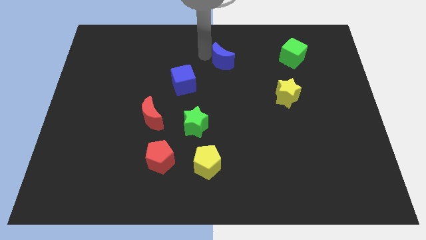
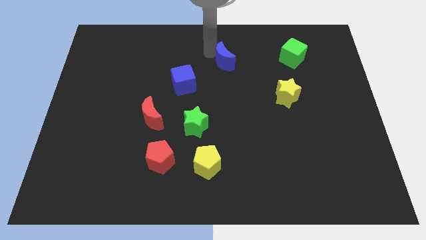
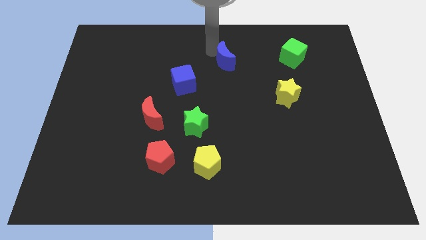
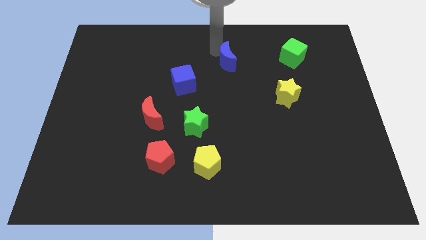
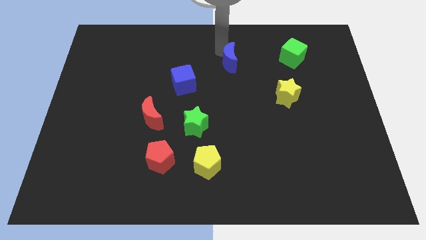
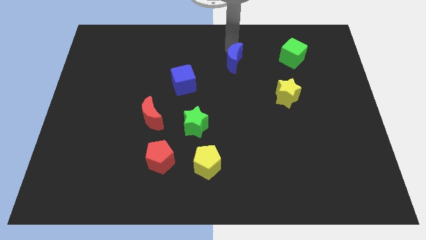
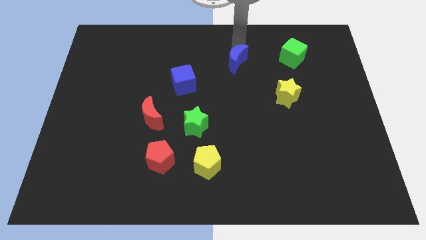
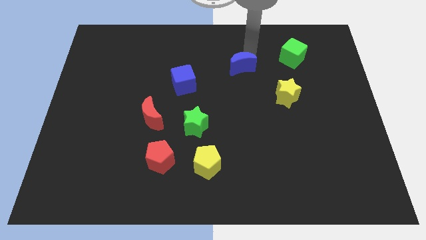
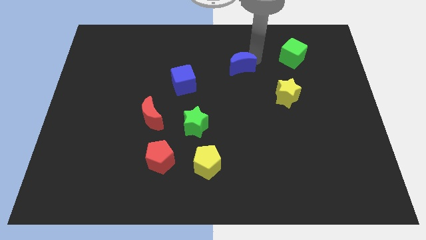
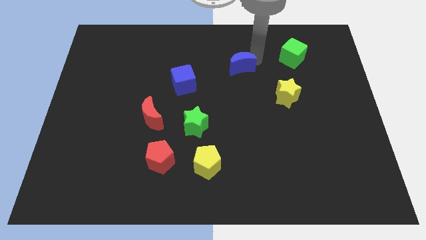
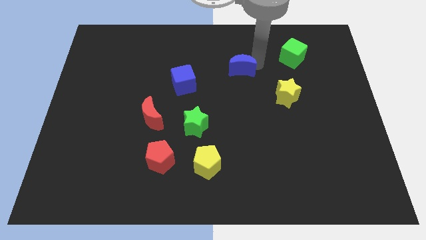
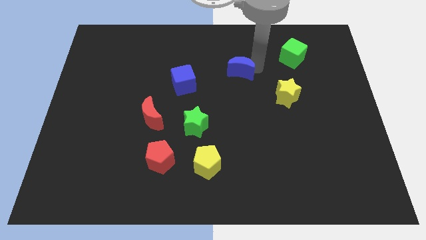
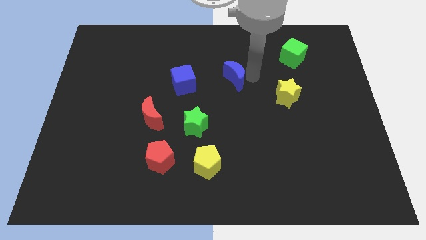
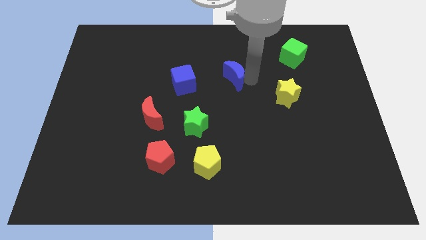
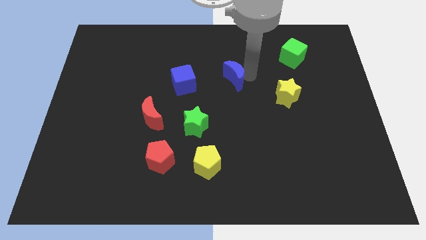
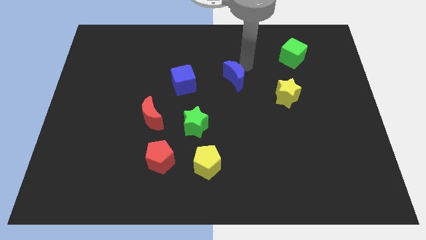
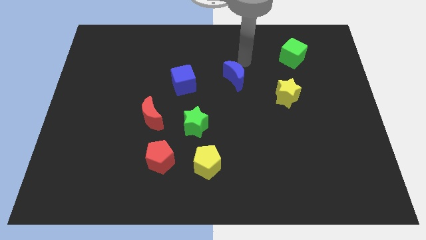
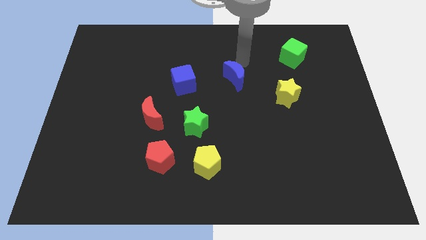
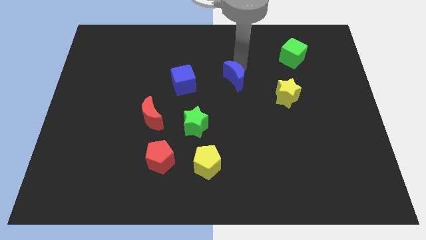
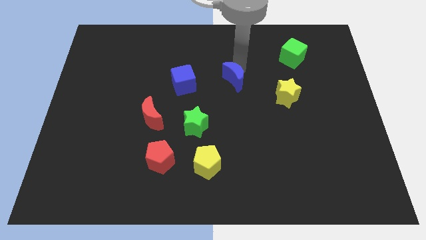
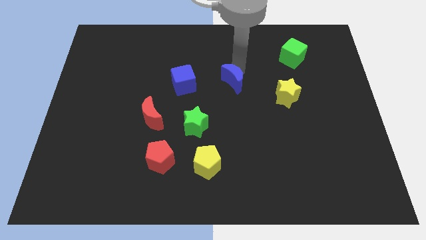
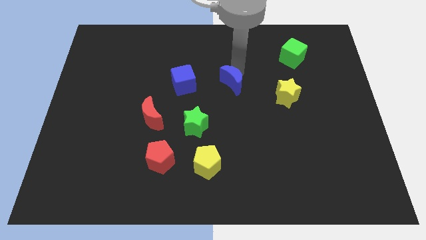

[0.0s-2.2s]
place blue moon adjacent to blue cube

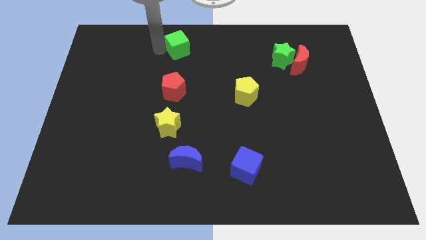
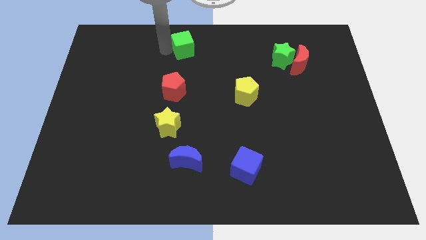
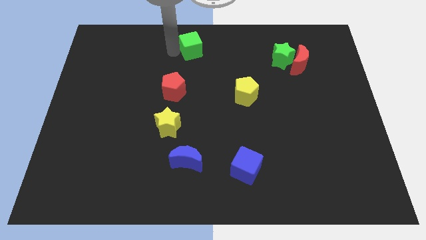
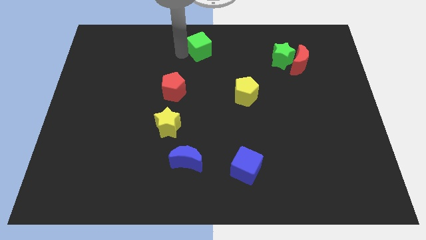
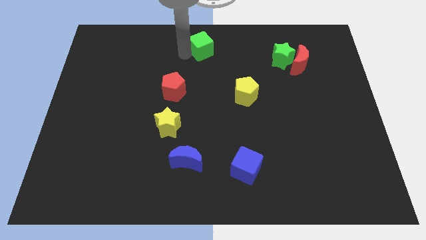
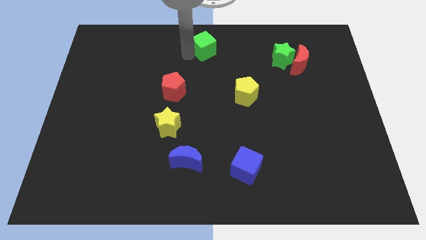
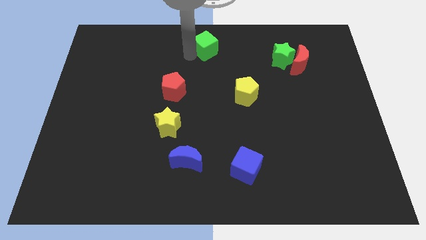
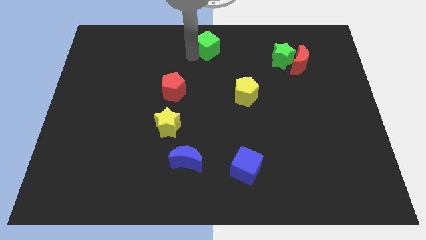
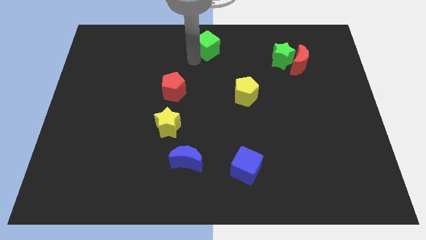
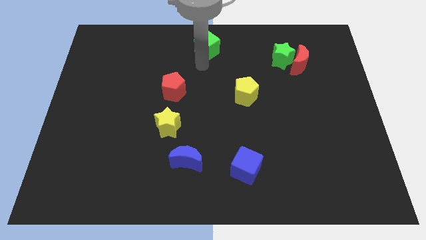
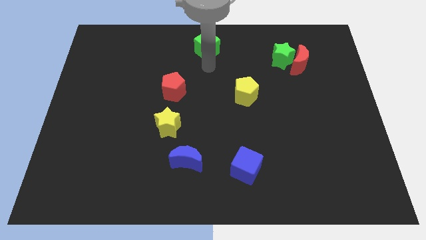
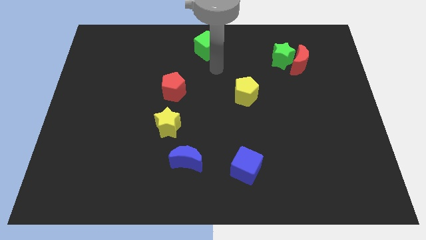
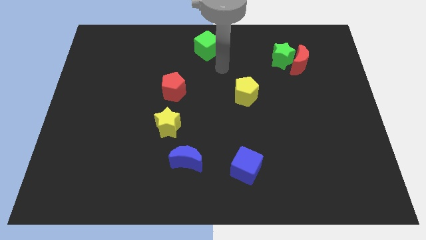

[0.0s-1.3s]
push green cube at the top center of the board

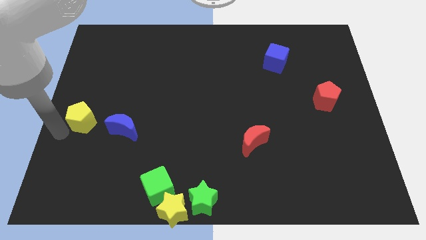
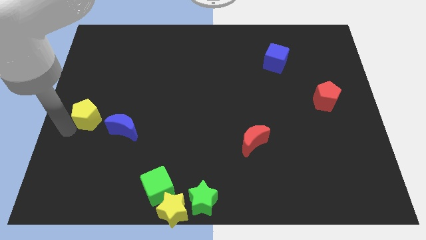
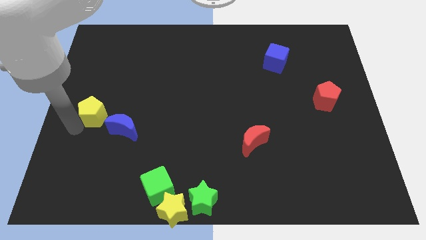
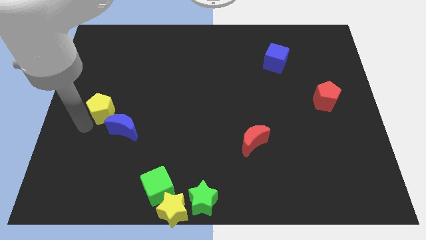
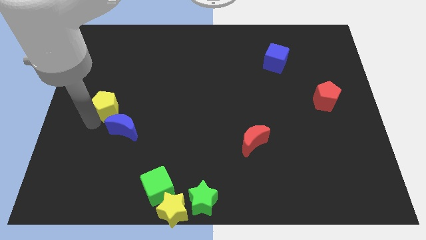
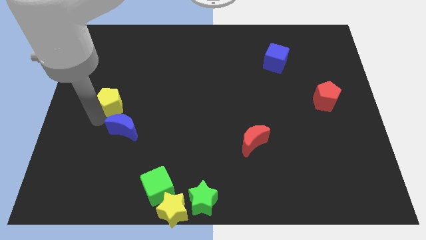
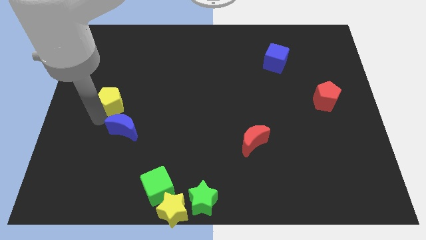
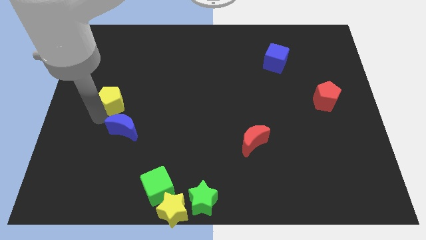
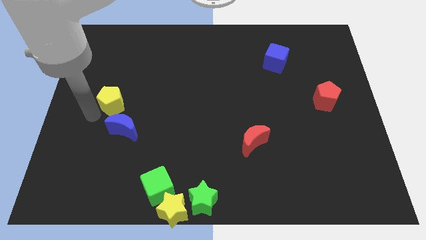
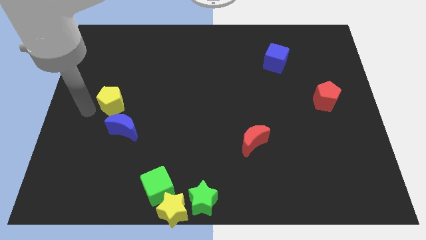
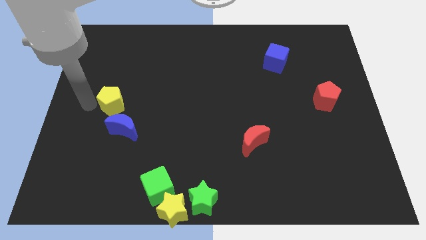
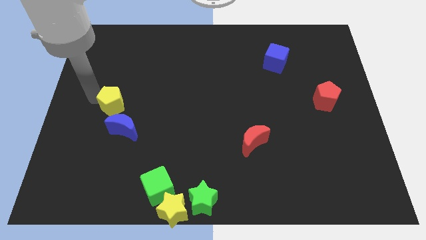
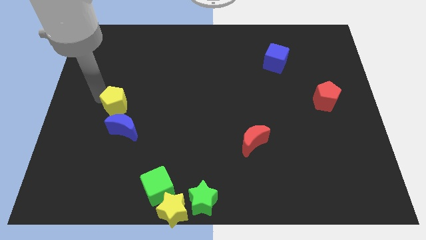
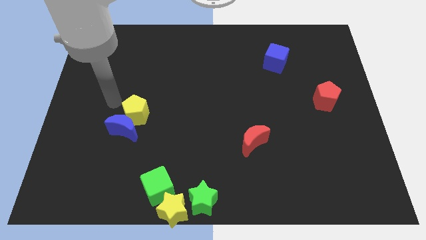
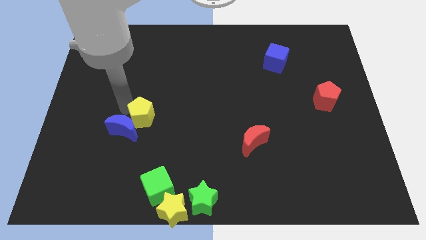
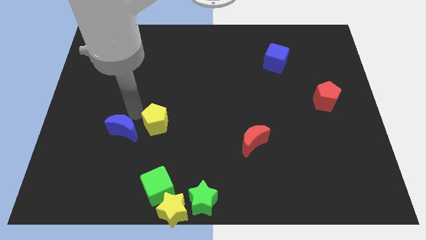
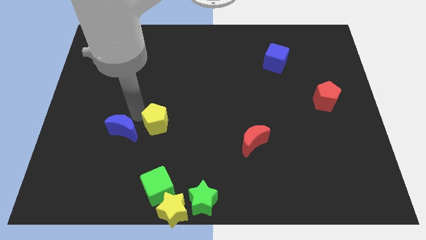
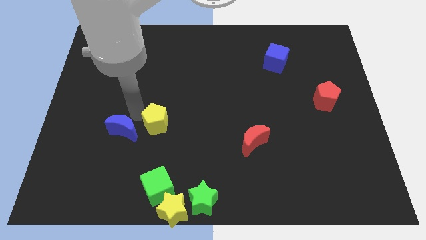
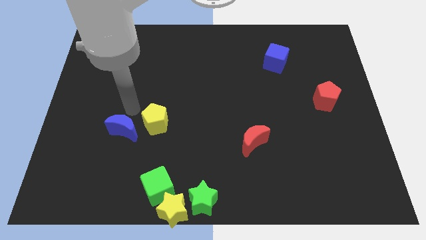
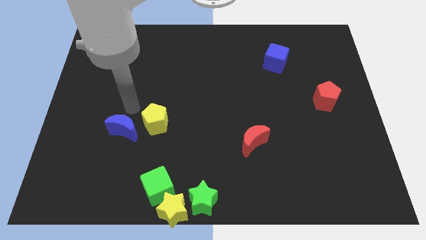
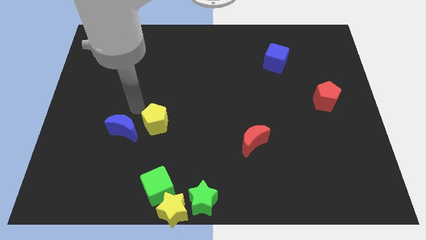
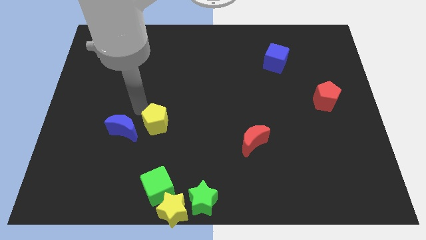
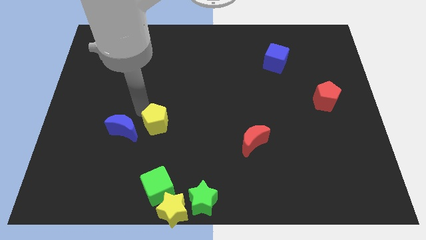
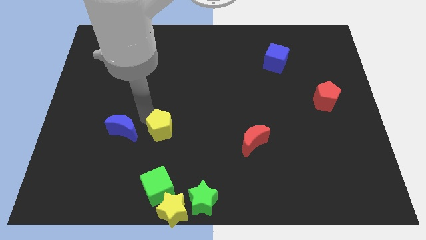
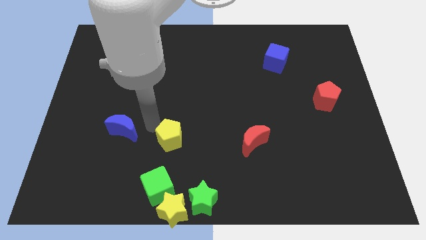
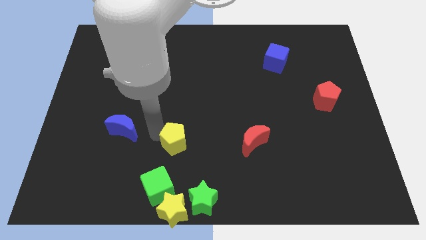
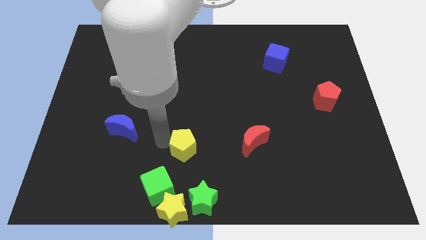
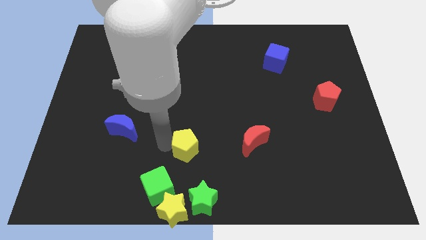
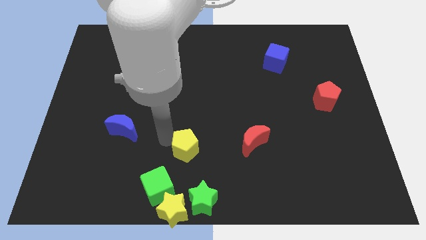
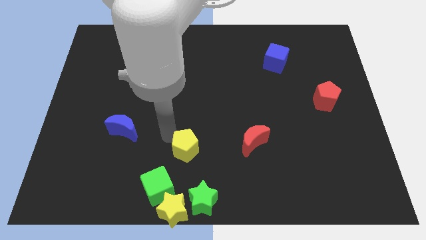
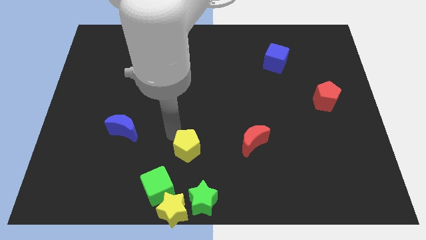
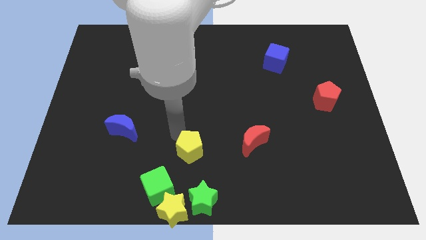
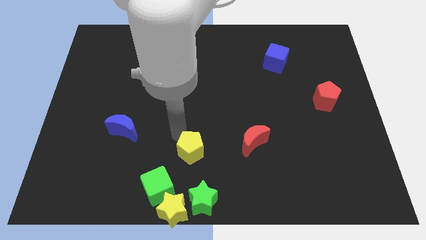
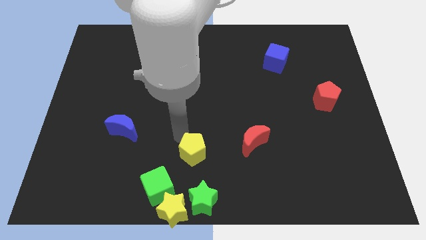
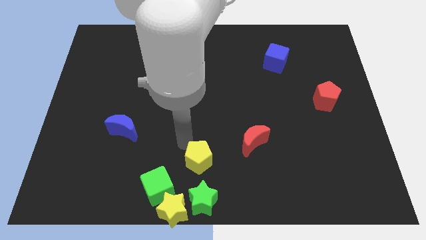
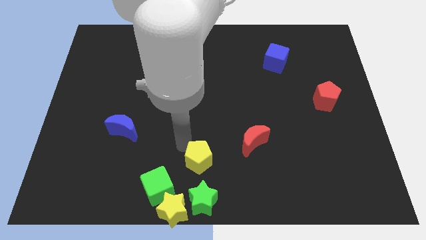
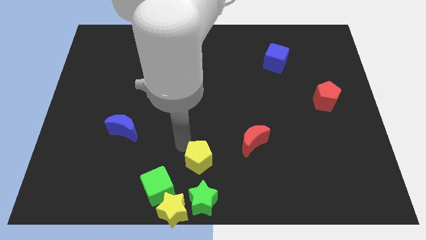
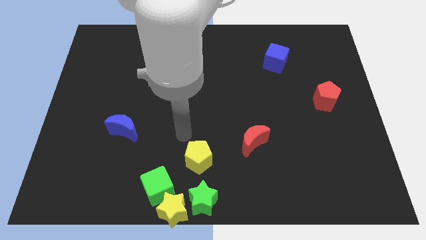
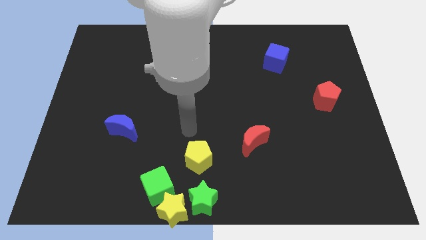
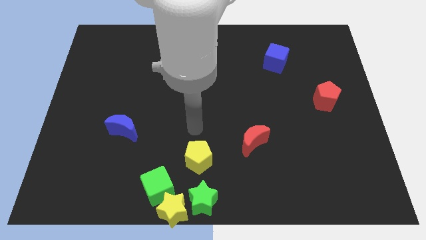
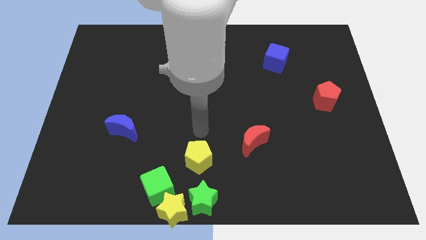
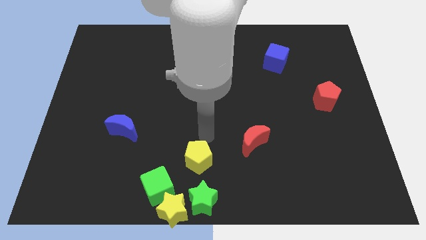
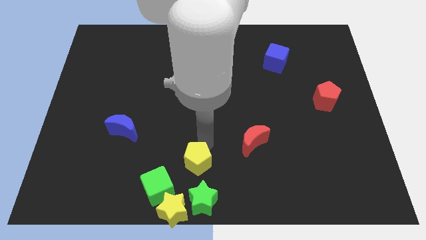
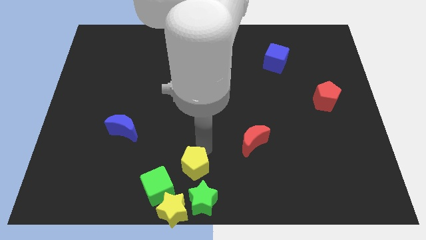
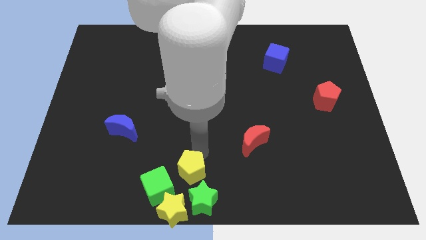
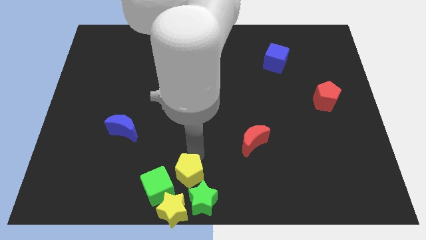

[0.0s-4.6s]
put the yellow pentagon diagonally top left to green star

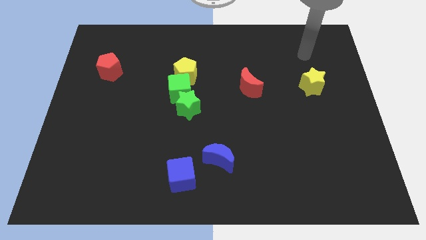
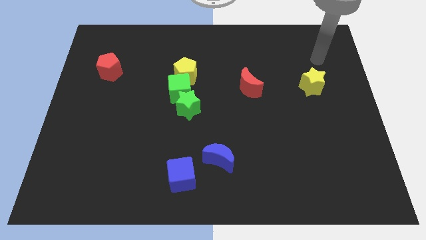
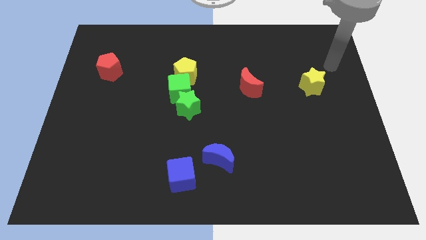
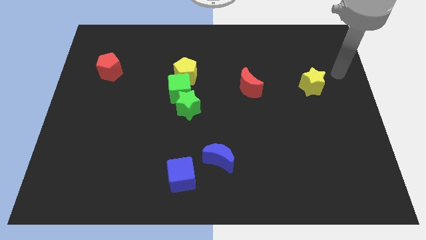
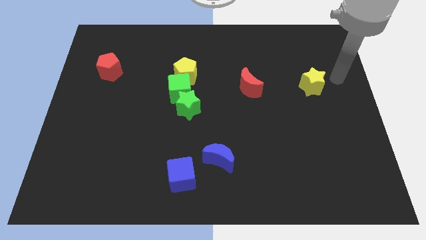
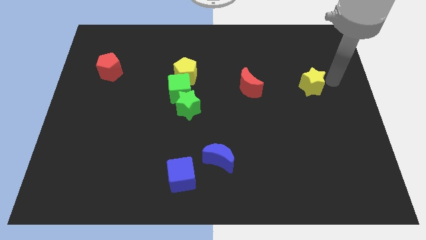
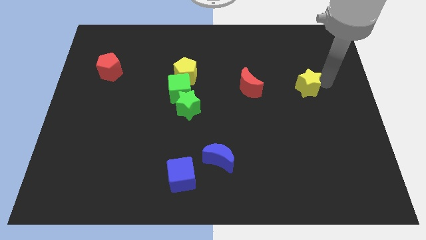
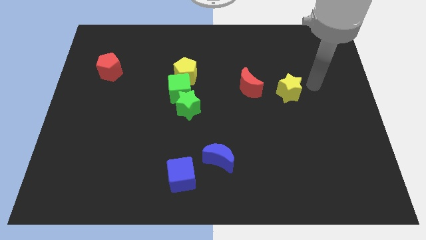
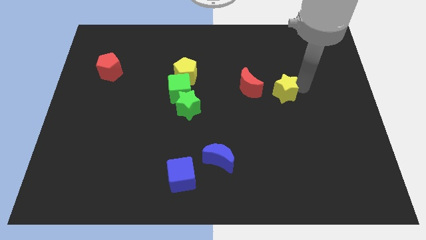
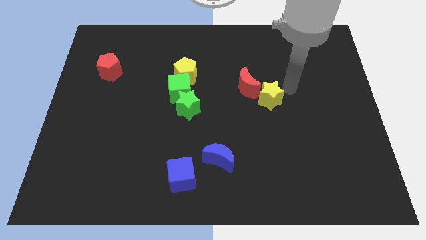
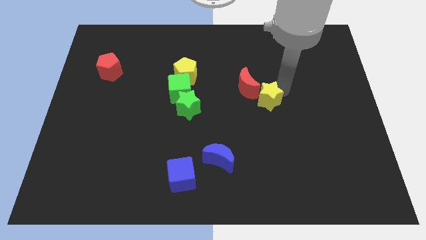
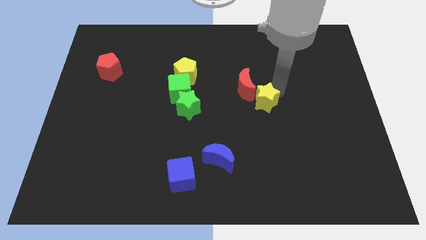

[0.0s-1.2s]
slide the yellow star into the red moon
